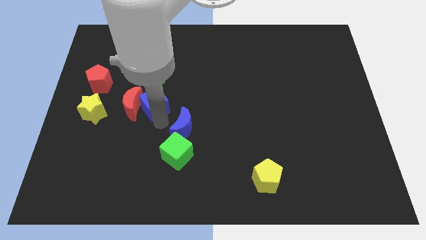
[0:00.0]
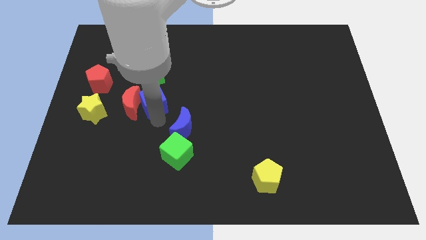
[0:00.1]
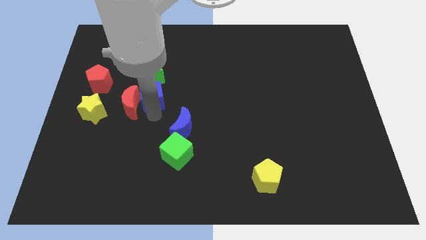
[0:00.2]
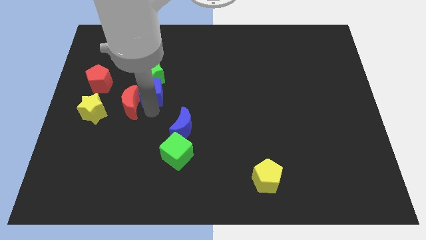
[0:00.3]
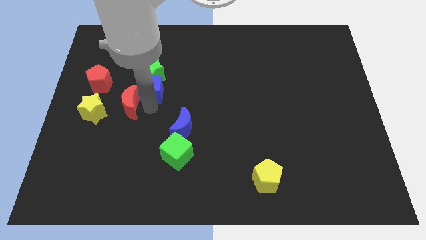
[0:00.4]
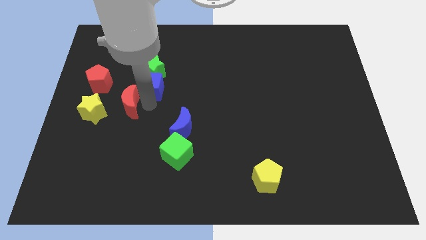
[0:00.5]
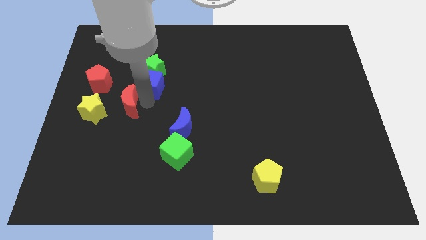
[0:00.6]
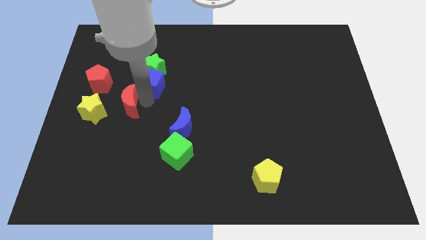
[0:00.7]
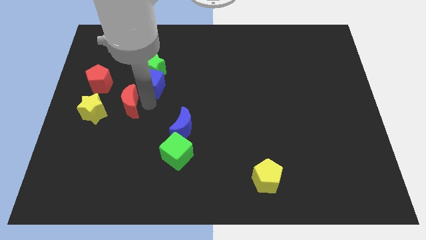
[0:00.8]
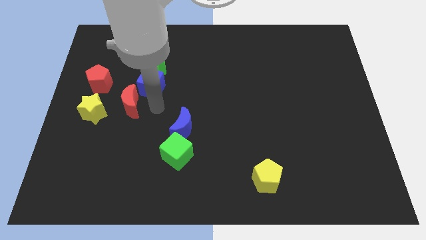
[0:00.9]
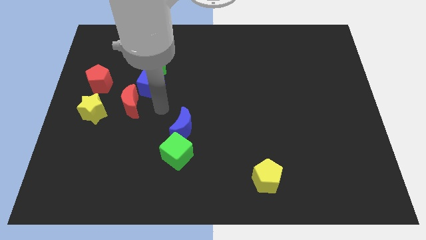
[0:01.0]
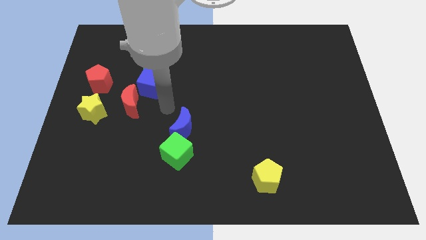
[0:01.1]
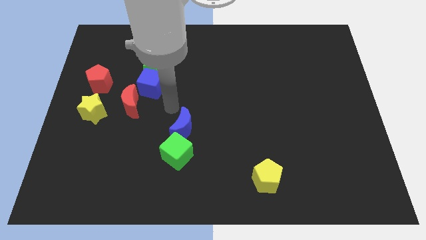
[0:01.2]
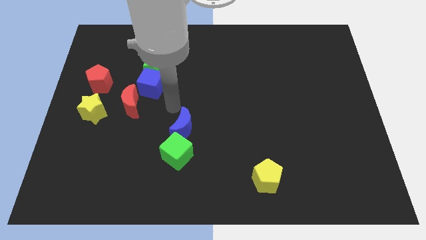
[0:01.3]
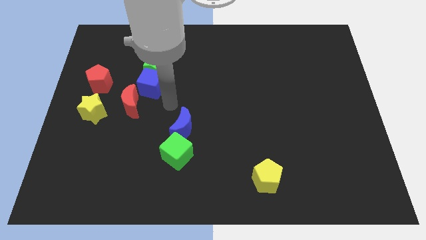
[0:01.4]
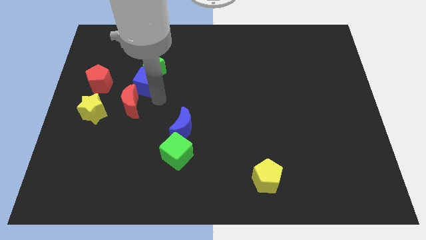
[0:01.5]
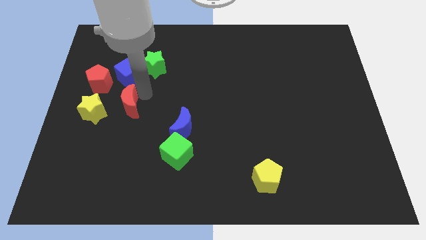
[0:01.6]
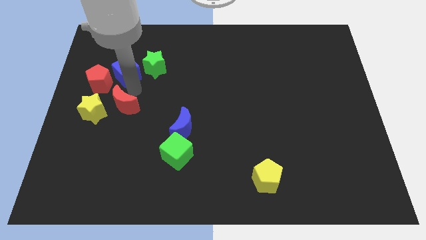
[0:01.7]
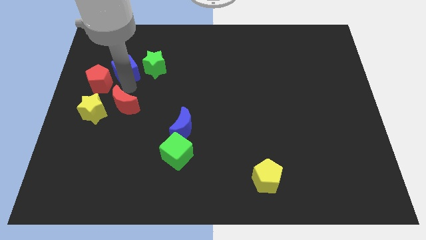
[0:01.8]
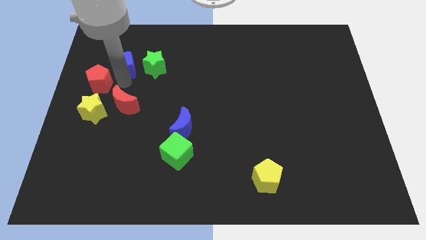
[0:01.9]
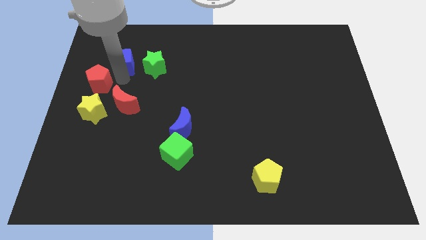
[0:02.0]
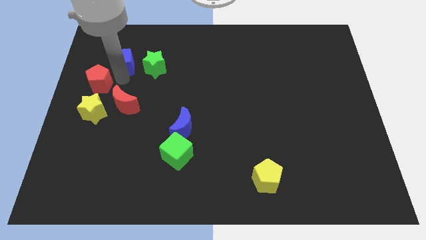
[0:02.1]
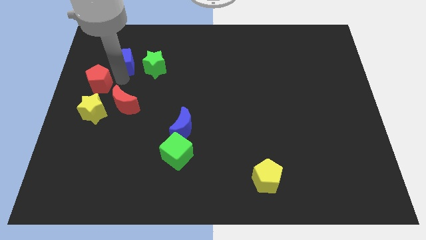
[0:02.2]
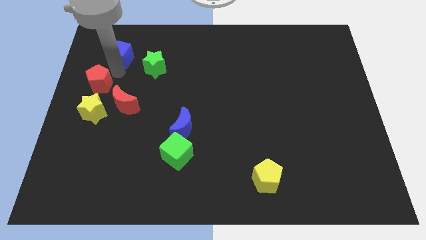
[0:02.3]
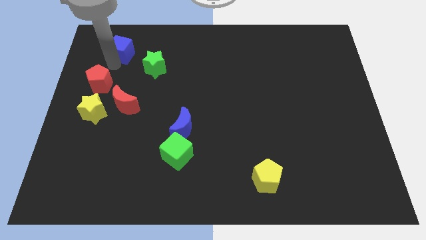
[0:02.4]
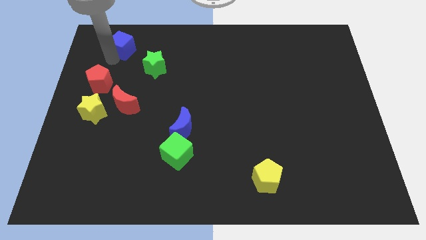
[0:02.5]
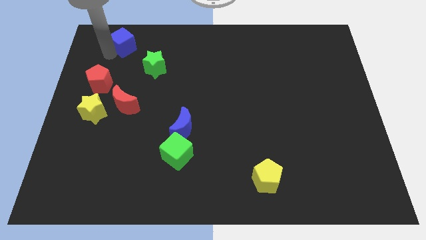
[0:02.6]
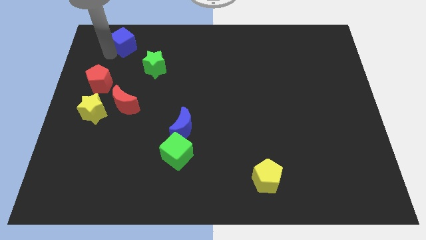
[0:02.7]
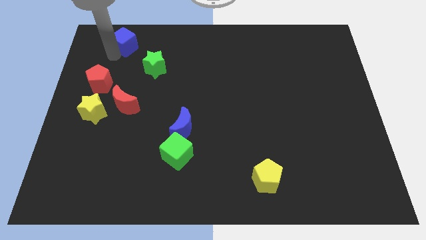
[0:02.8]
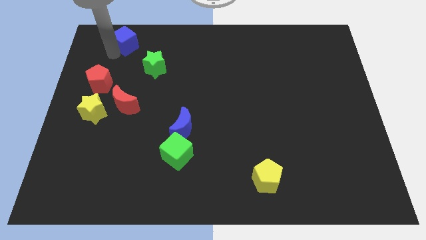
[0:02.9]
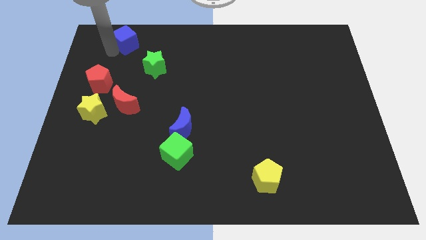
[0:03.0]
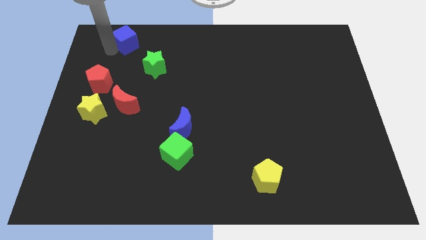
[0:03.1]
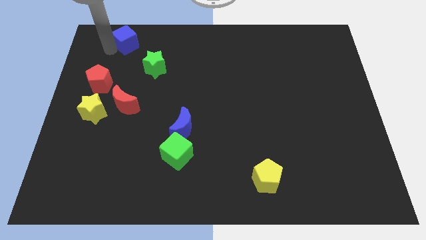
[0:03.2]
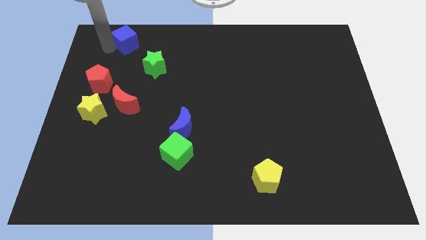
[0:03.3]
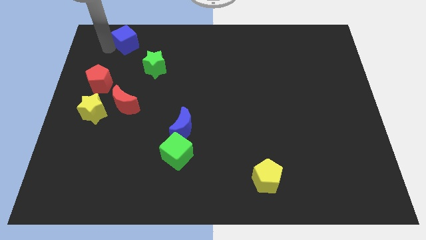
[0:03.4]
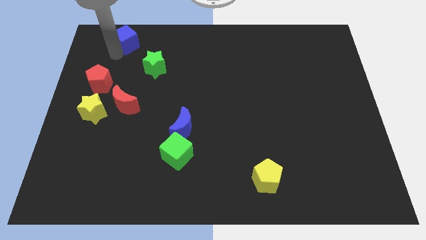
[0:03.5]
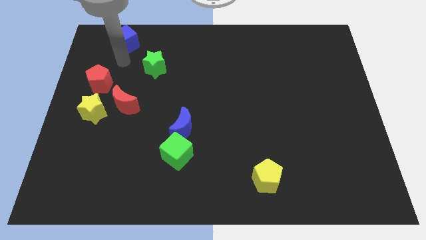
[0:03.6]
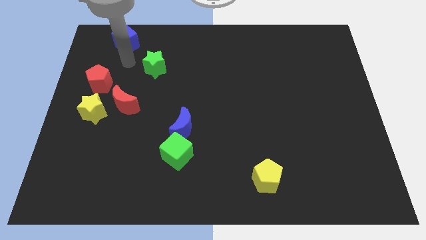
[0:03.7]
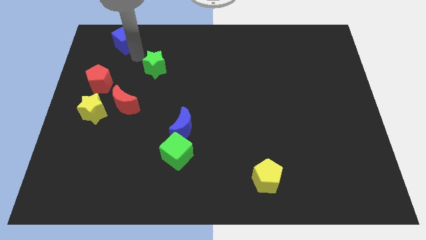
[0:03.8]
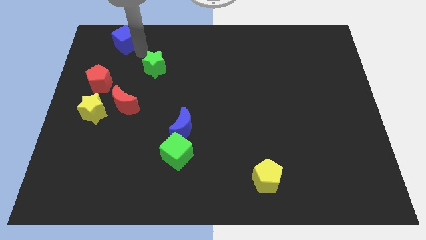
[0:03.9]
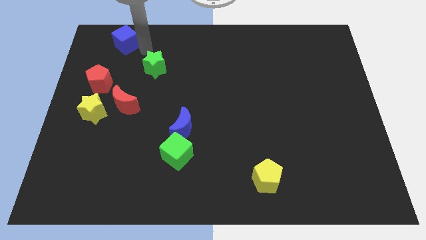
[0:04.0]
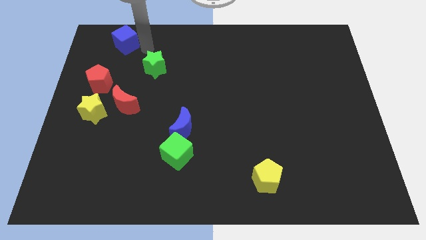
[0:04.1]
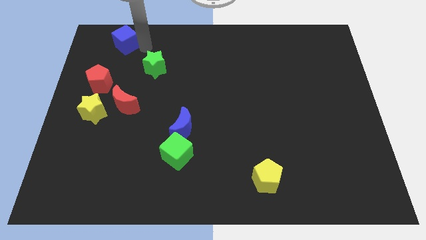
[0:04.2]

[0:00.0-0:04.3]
move the blue cube to the top left

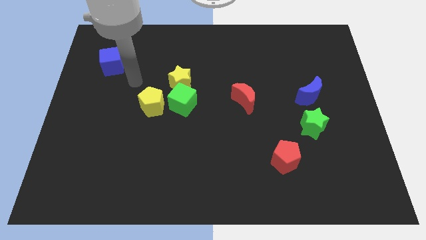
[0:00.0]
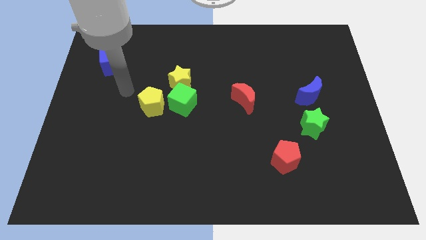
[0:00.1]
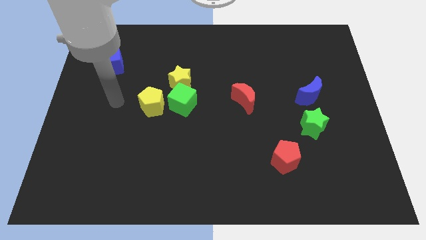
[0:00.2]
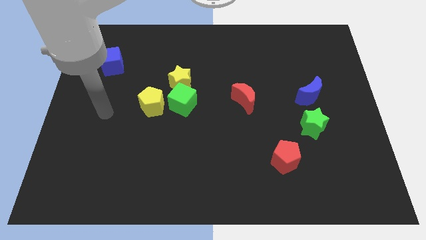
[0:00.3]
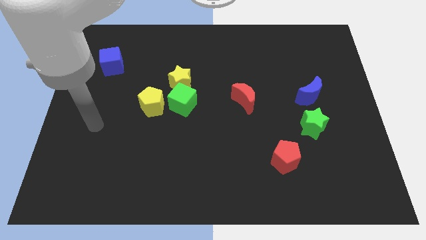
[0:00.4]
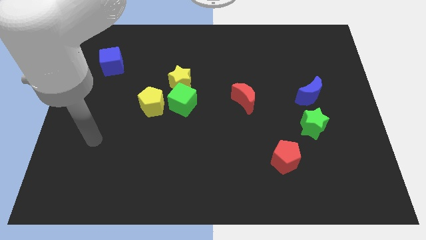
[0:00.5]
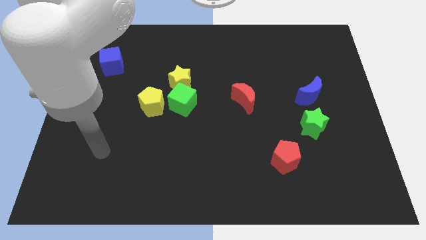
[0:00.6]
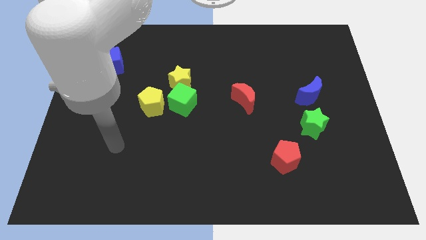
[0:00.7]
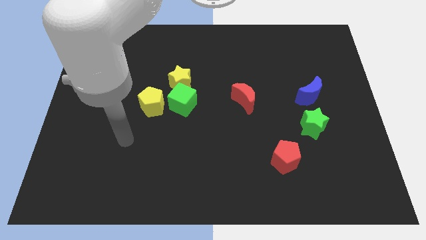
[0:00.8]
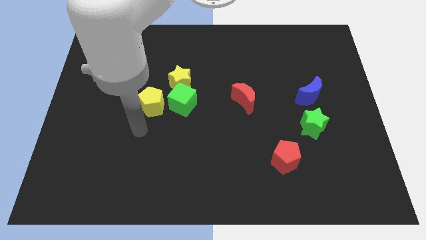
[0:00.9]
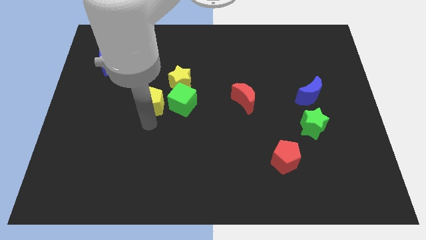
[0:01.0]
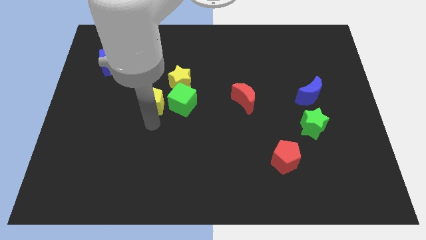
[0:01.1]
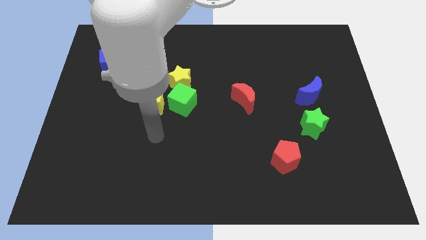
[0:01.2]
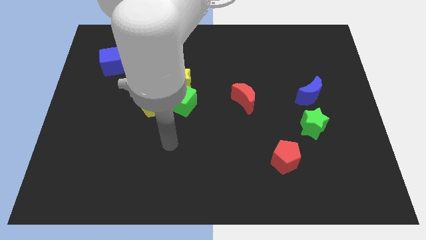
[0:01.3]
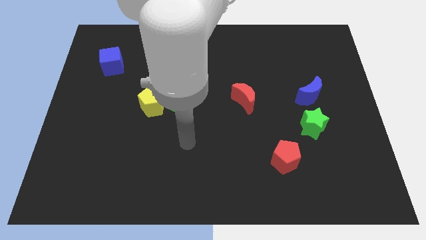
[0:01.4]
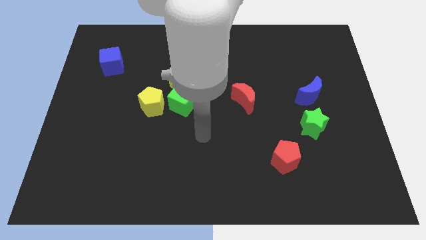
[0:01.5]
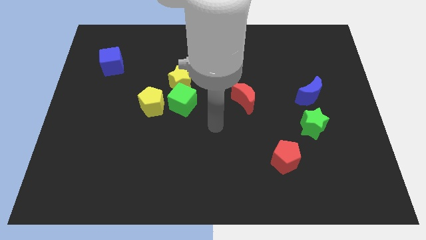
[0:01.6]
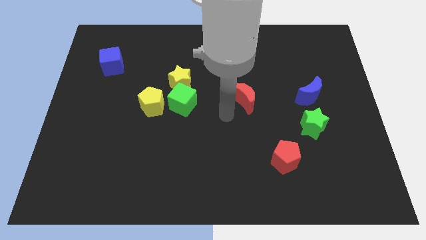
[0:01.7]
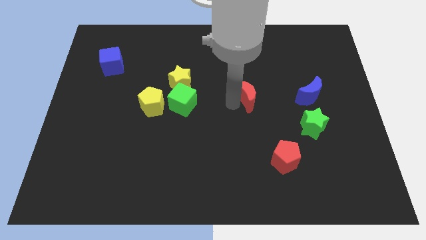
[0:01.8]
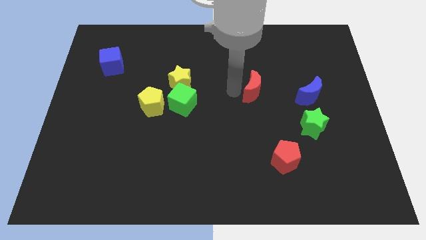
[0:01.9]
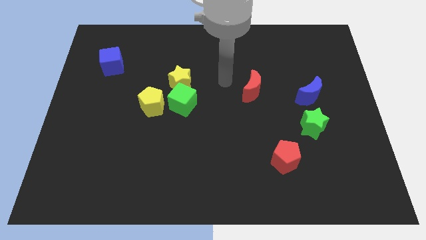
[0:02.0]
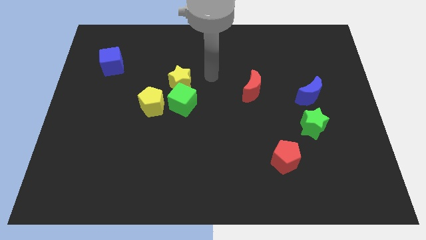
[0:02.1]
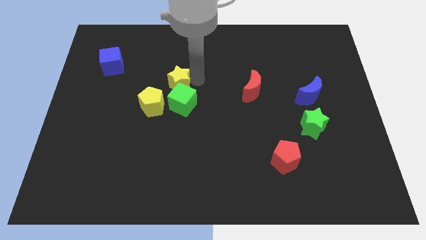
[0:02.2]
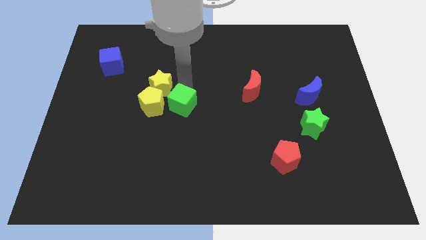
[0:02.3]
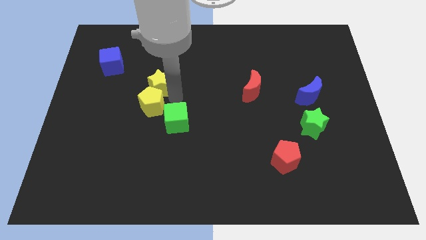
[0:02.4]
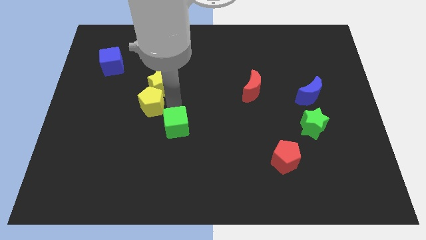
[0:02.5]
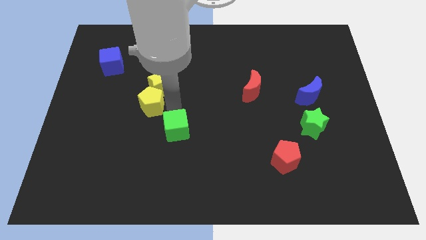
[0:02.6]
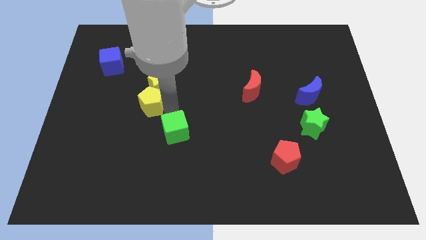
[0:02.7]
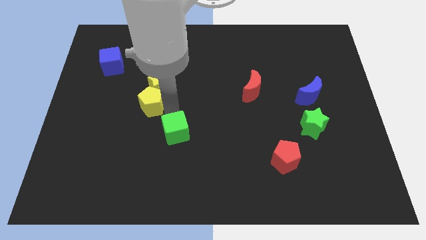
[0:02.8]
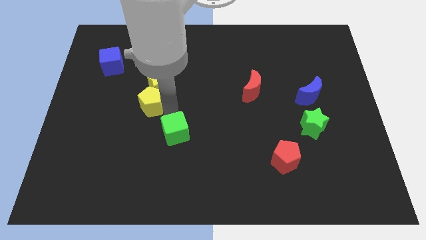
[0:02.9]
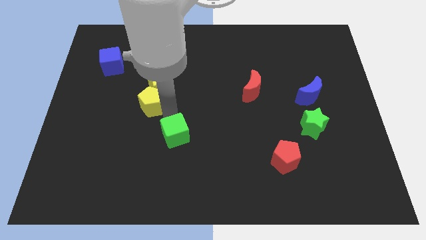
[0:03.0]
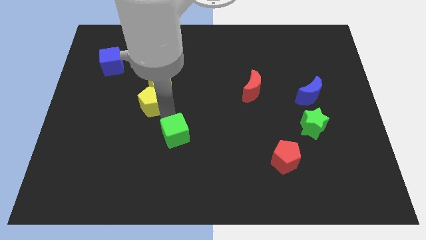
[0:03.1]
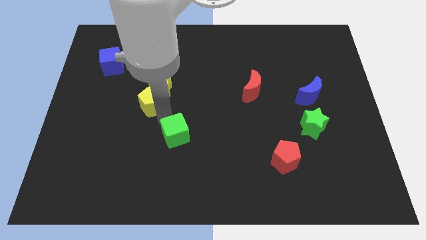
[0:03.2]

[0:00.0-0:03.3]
separate green cube from yellow star

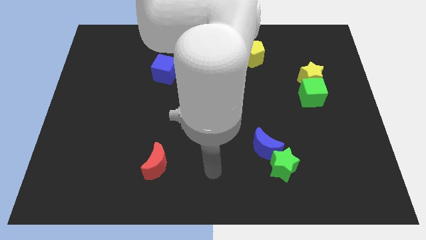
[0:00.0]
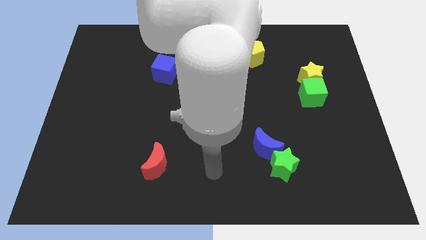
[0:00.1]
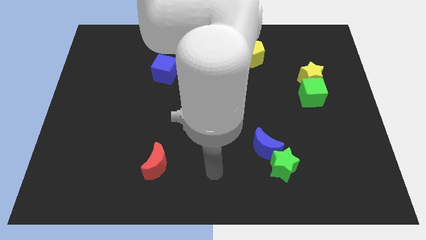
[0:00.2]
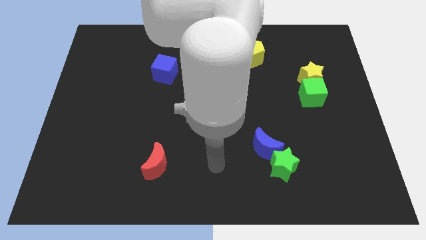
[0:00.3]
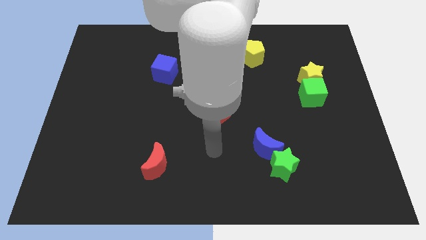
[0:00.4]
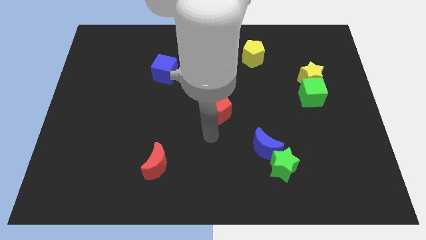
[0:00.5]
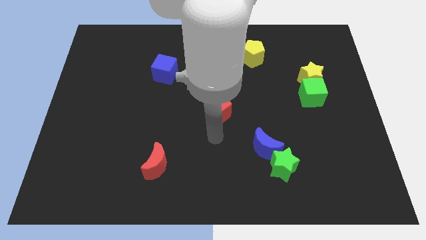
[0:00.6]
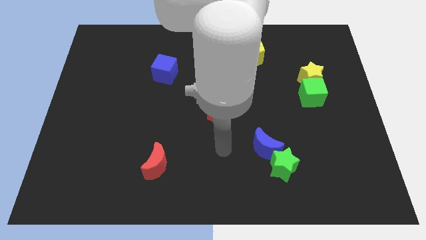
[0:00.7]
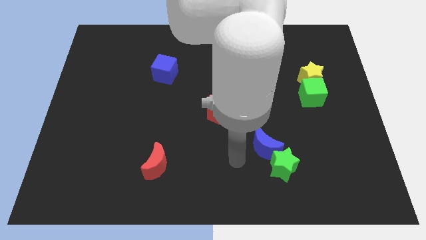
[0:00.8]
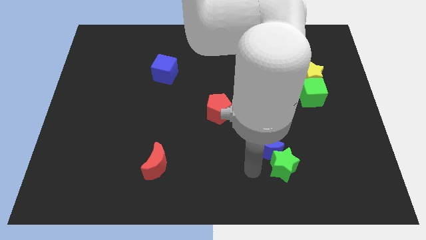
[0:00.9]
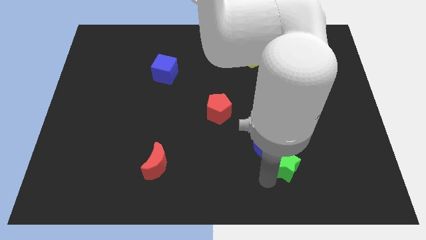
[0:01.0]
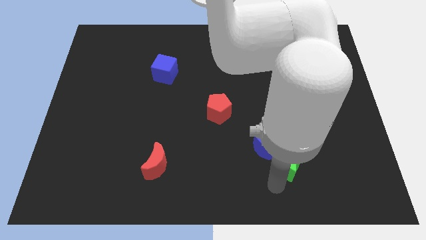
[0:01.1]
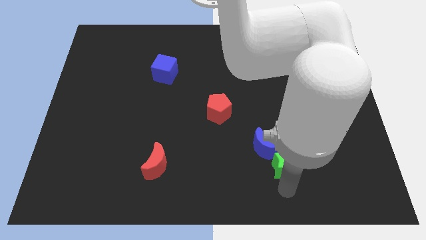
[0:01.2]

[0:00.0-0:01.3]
move the arm to the bottom of the green star
